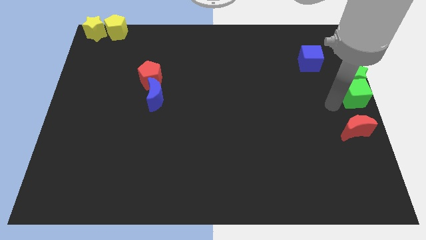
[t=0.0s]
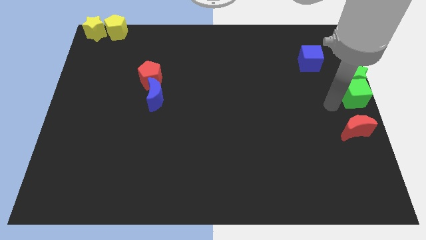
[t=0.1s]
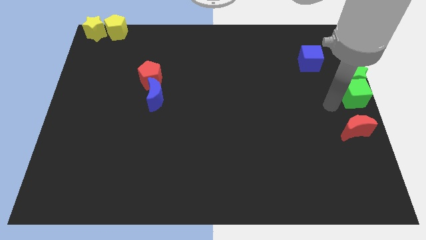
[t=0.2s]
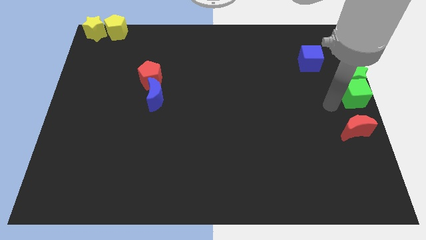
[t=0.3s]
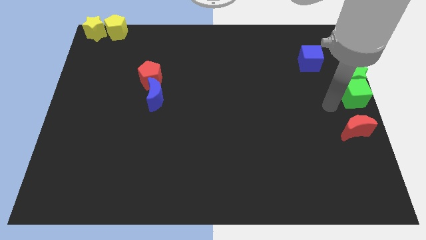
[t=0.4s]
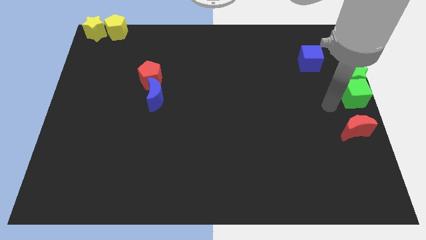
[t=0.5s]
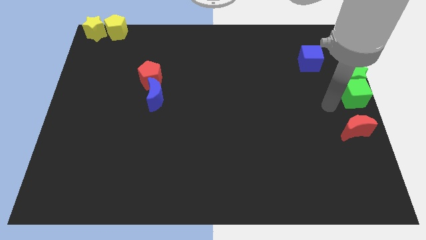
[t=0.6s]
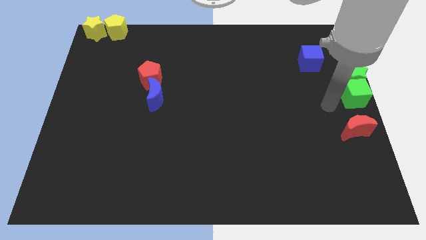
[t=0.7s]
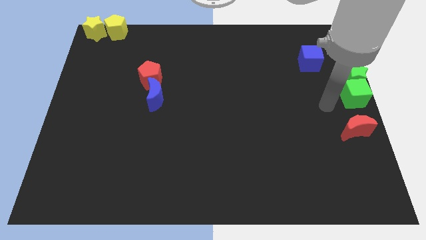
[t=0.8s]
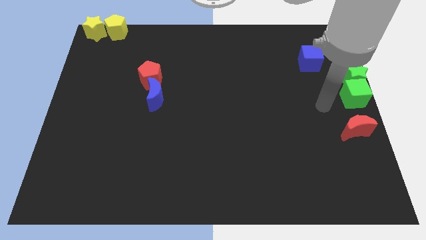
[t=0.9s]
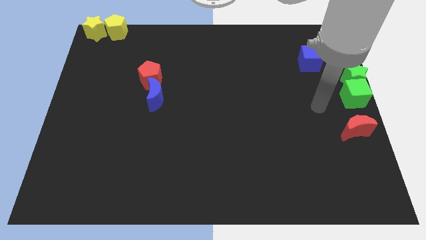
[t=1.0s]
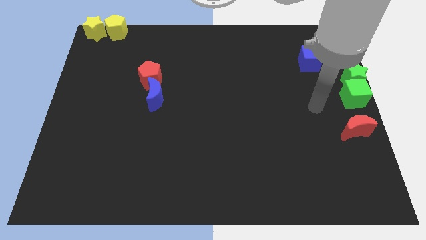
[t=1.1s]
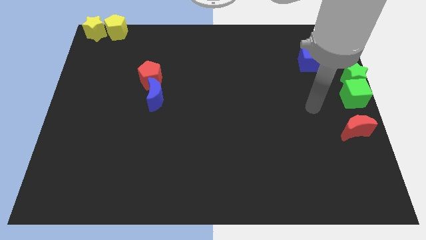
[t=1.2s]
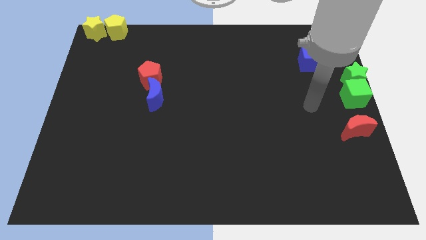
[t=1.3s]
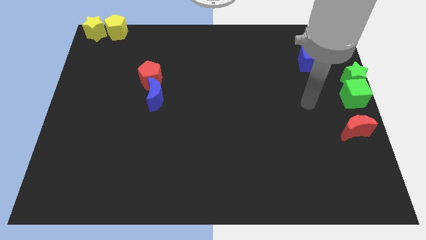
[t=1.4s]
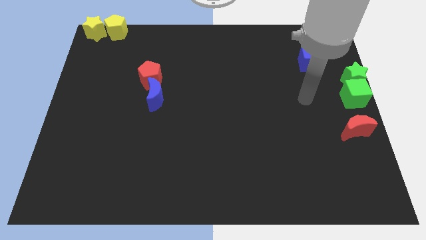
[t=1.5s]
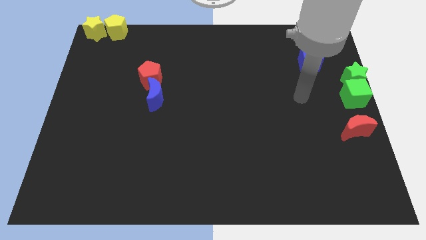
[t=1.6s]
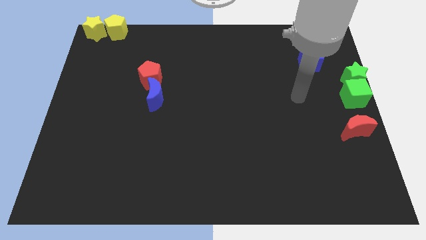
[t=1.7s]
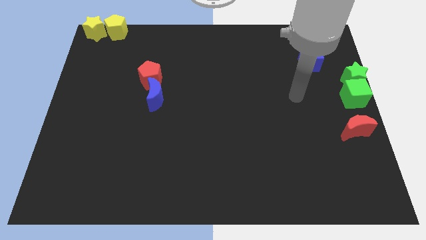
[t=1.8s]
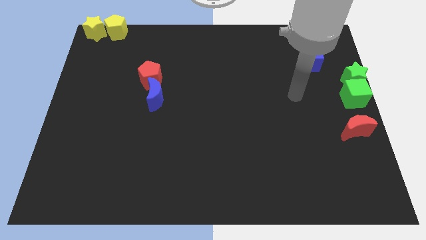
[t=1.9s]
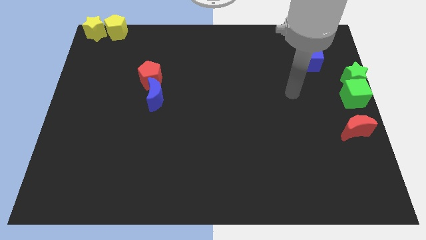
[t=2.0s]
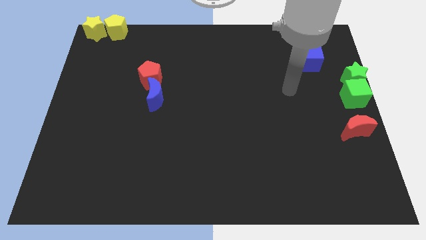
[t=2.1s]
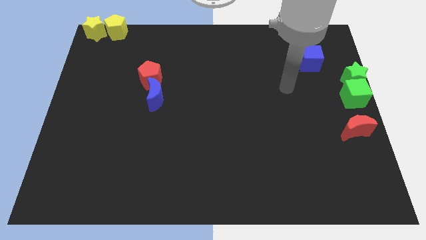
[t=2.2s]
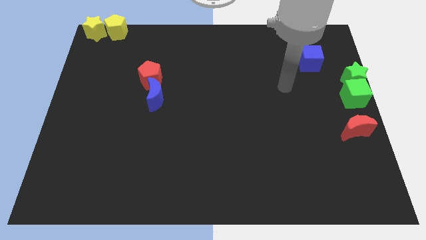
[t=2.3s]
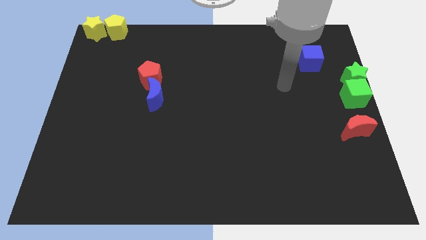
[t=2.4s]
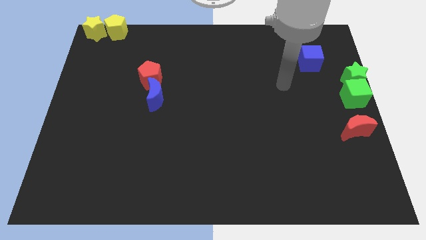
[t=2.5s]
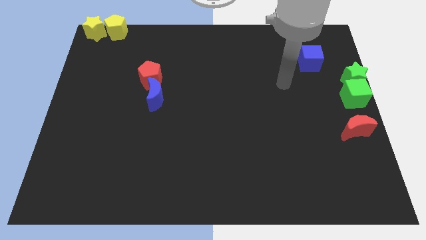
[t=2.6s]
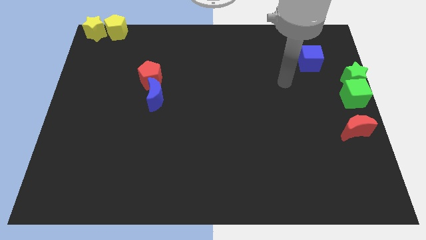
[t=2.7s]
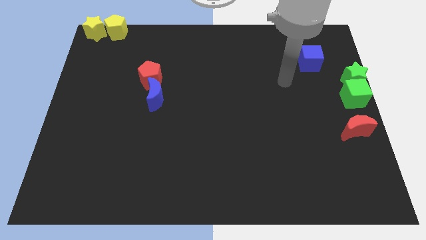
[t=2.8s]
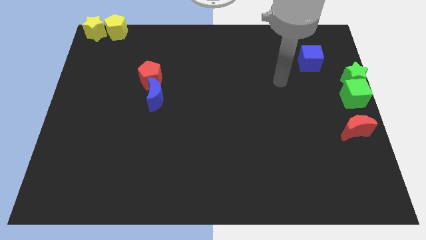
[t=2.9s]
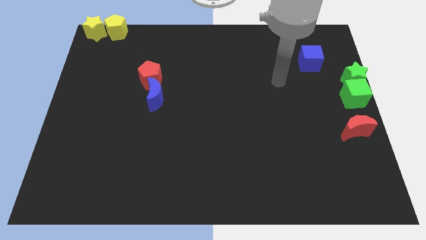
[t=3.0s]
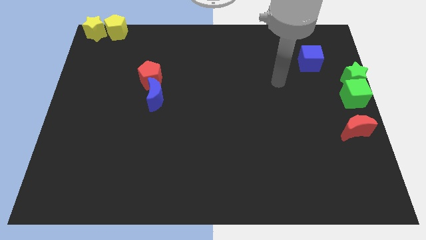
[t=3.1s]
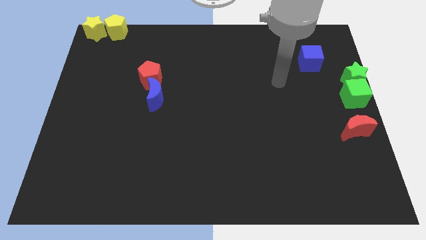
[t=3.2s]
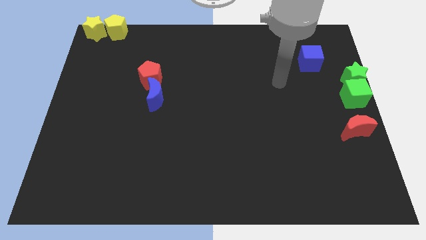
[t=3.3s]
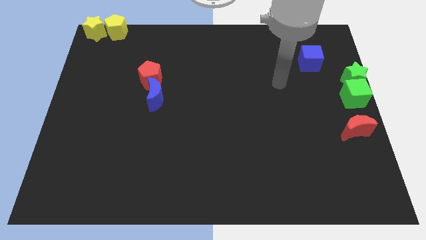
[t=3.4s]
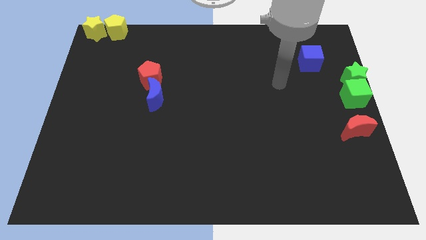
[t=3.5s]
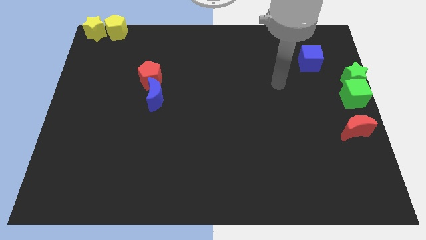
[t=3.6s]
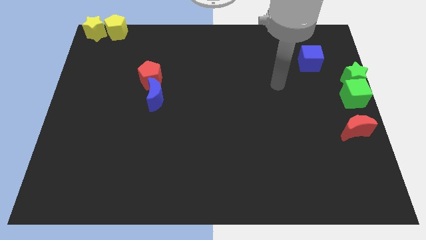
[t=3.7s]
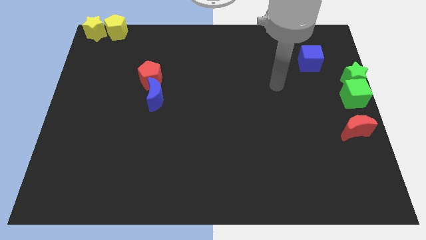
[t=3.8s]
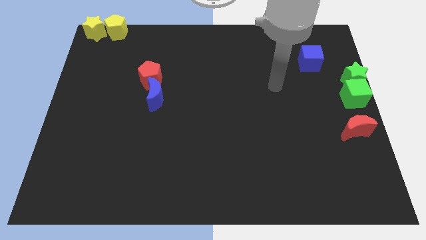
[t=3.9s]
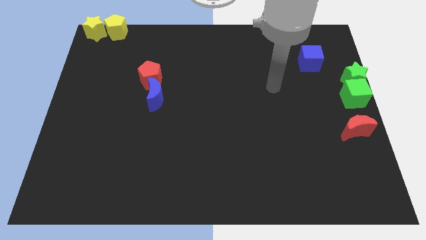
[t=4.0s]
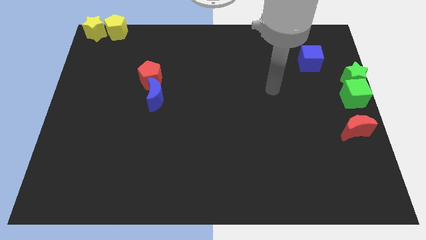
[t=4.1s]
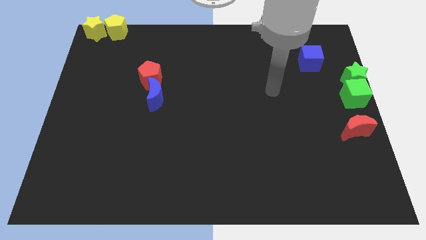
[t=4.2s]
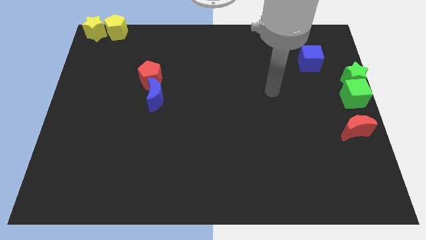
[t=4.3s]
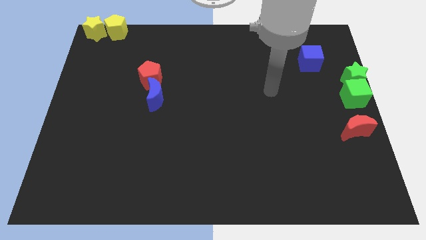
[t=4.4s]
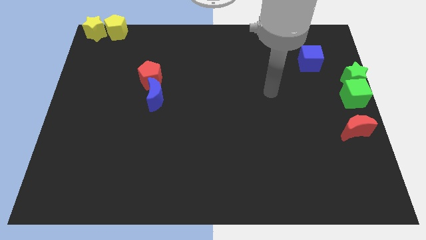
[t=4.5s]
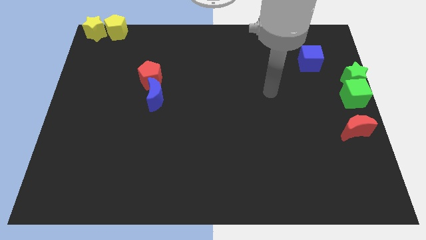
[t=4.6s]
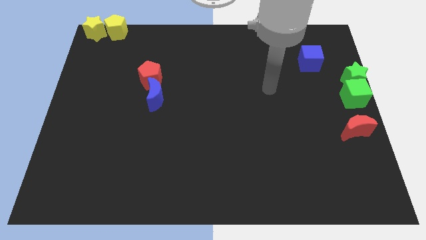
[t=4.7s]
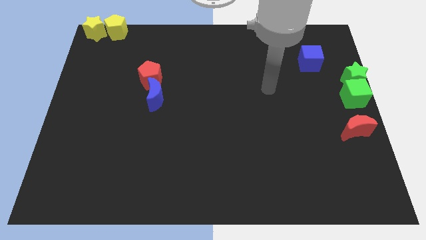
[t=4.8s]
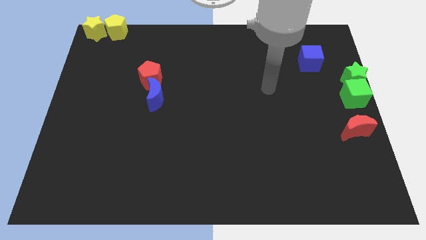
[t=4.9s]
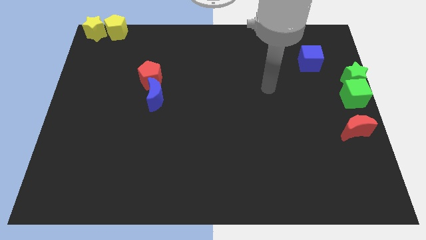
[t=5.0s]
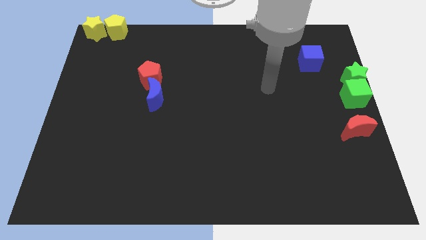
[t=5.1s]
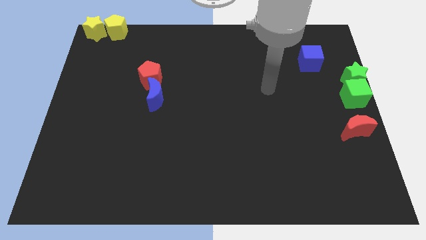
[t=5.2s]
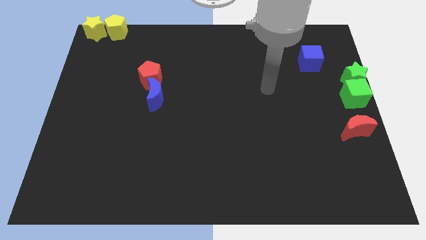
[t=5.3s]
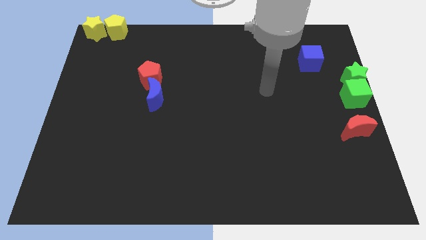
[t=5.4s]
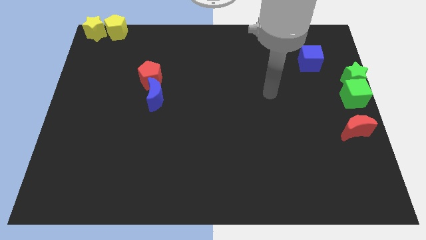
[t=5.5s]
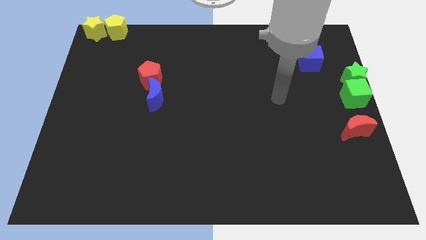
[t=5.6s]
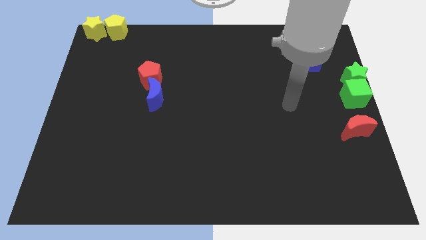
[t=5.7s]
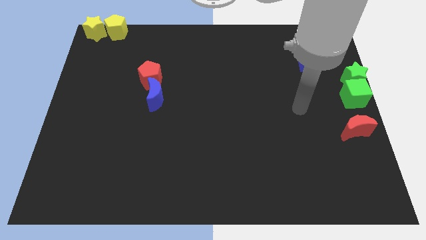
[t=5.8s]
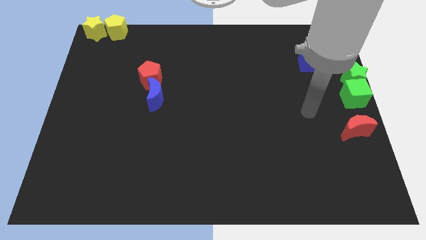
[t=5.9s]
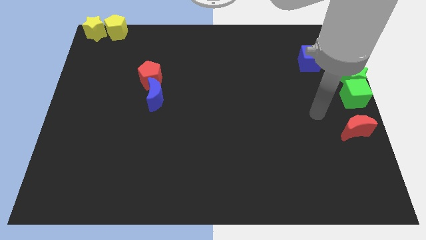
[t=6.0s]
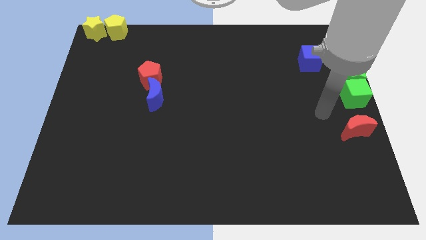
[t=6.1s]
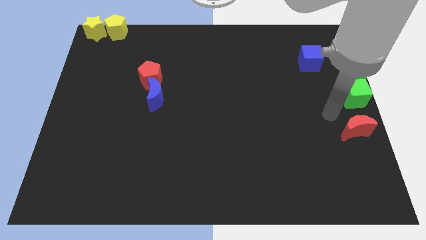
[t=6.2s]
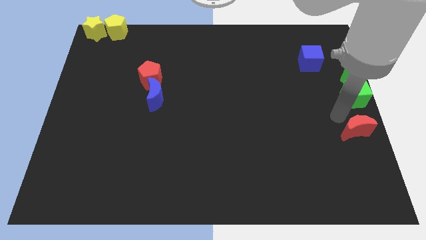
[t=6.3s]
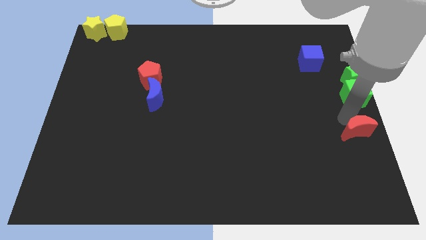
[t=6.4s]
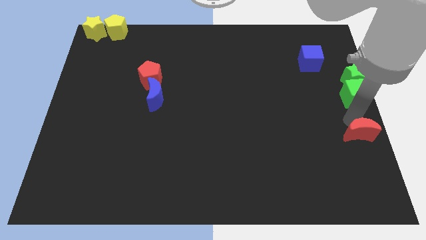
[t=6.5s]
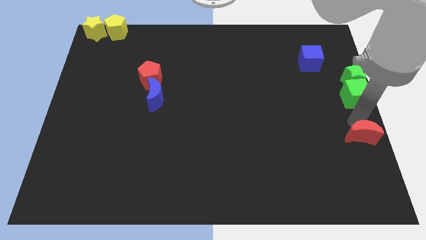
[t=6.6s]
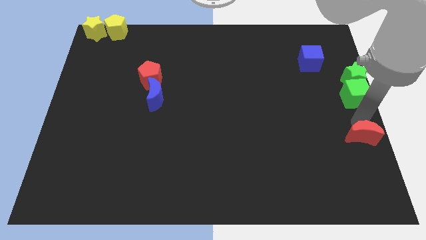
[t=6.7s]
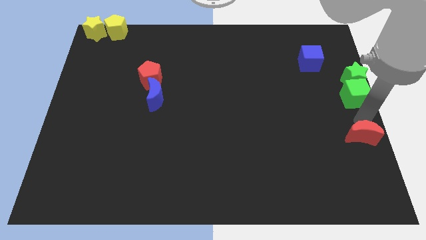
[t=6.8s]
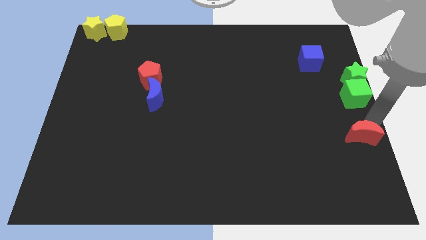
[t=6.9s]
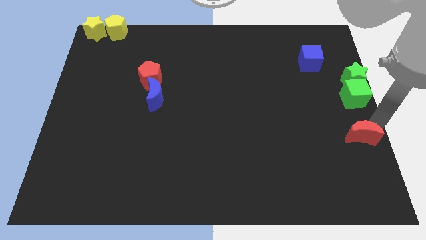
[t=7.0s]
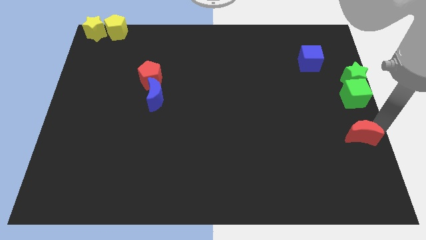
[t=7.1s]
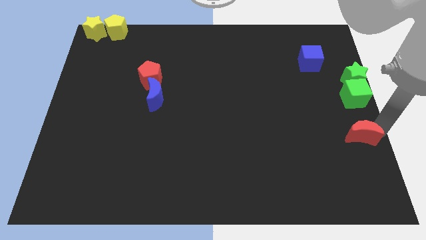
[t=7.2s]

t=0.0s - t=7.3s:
move your arm towards the top of the red crescent

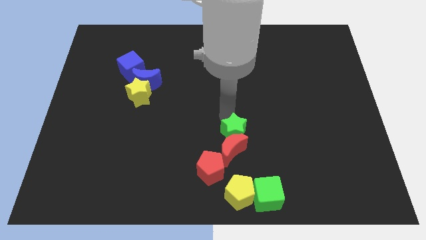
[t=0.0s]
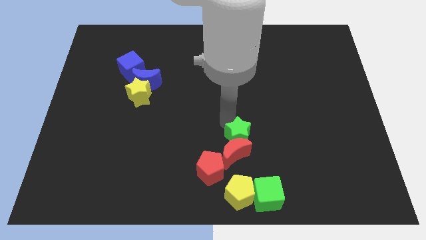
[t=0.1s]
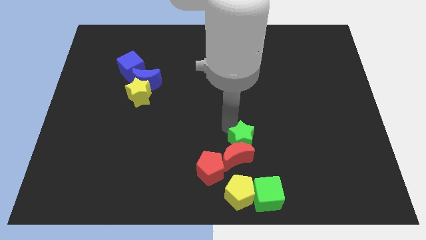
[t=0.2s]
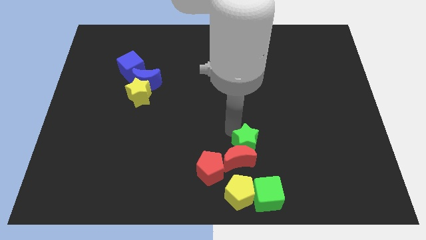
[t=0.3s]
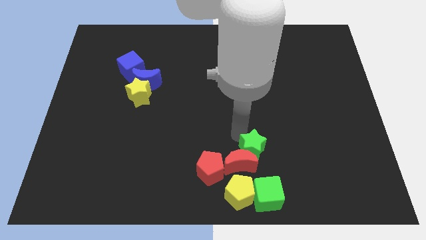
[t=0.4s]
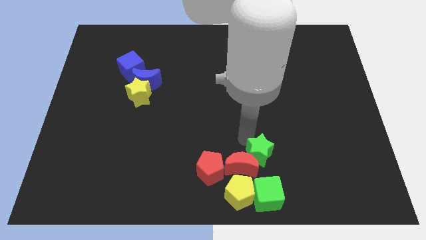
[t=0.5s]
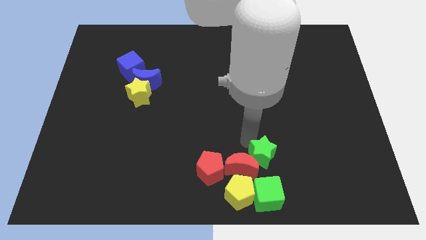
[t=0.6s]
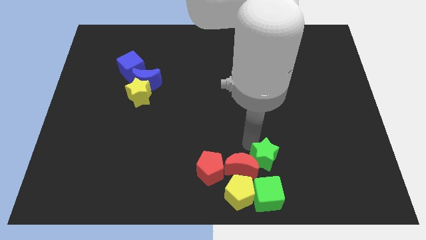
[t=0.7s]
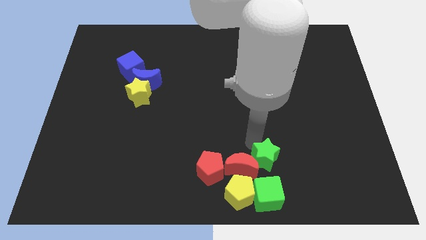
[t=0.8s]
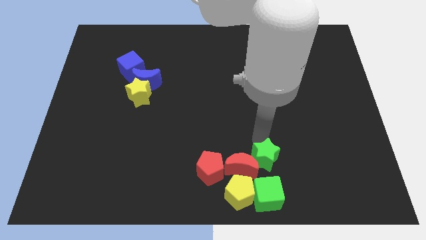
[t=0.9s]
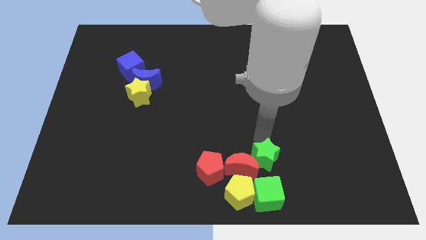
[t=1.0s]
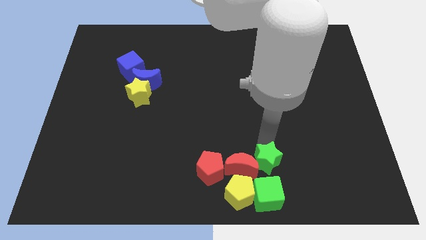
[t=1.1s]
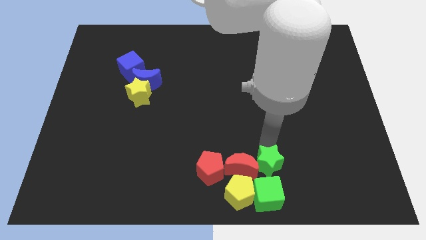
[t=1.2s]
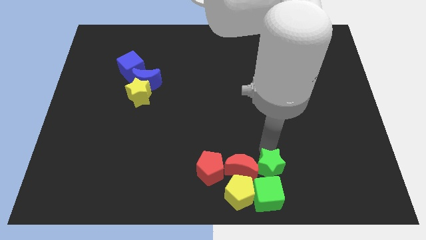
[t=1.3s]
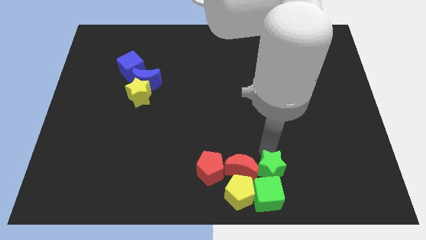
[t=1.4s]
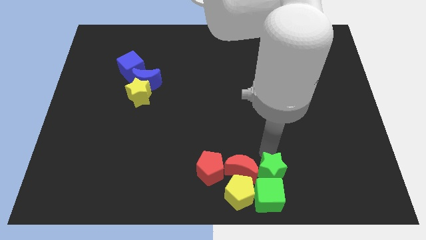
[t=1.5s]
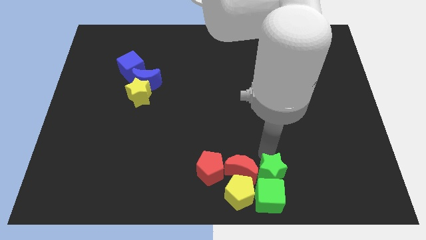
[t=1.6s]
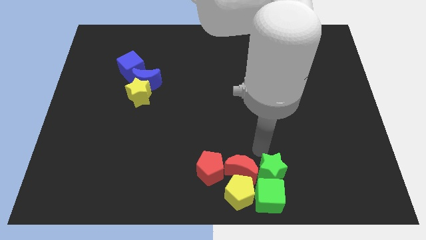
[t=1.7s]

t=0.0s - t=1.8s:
put the green star at the top of the green cube
